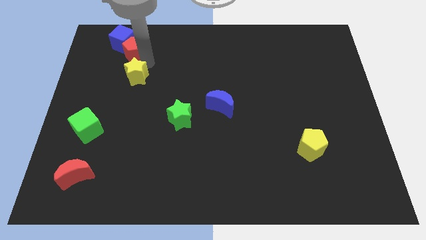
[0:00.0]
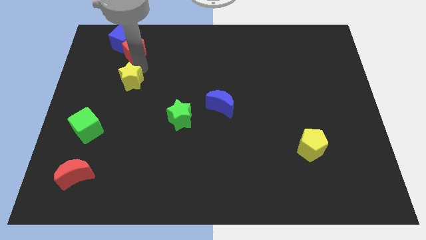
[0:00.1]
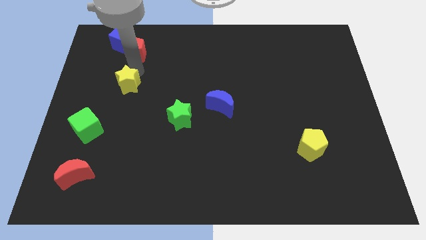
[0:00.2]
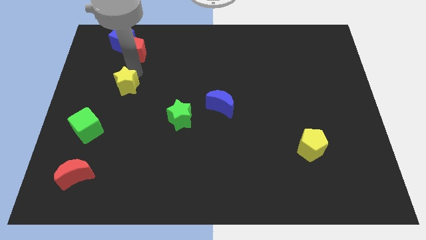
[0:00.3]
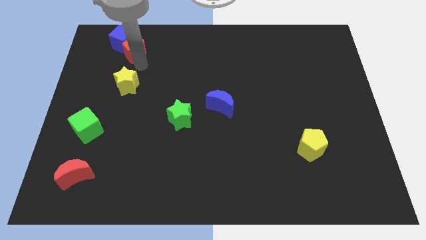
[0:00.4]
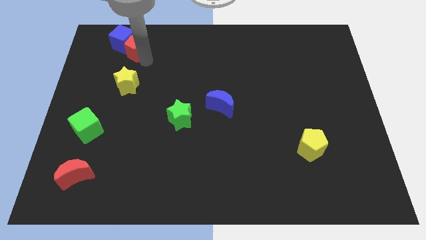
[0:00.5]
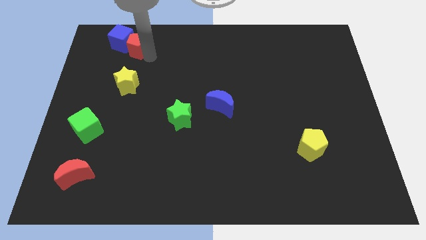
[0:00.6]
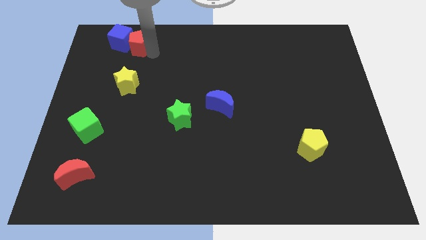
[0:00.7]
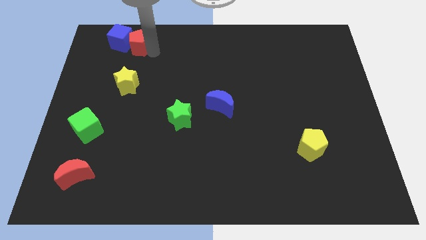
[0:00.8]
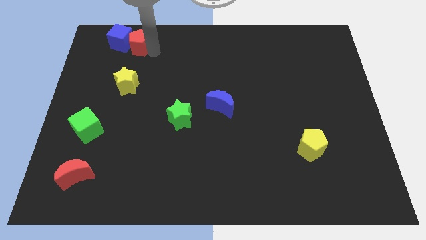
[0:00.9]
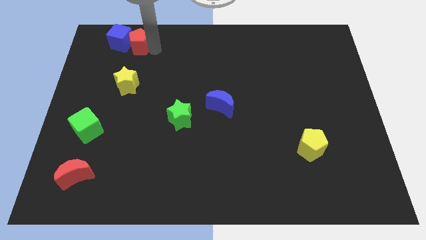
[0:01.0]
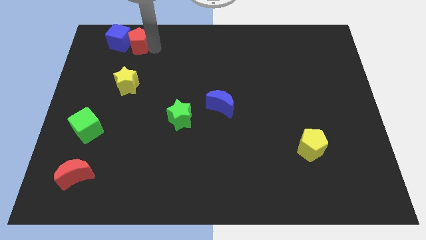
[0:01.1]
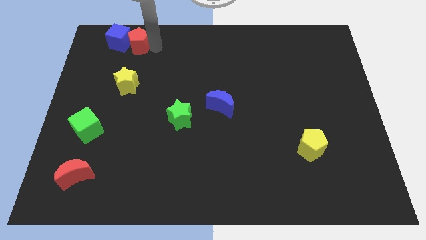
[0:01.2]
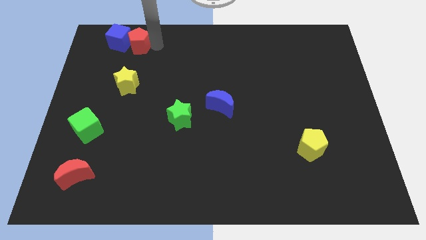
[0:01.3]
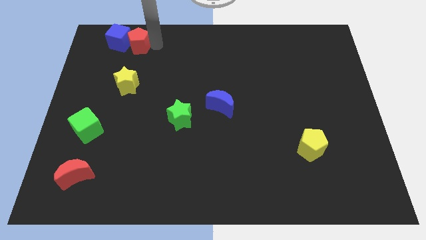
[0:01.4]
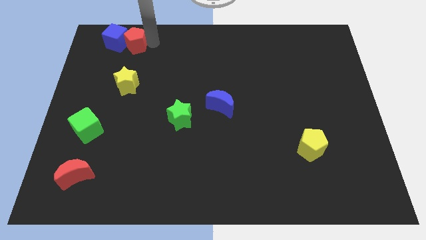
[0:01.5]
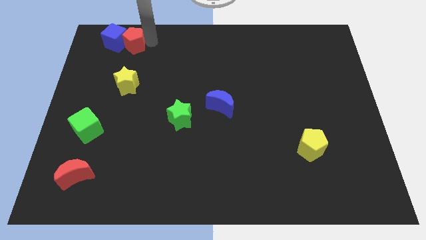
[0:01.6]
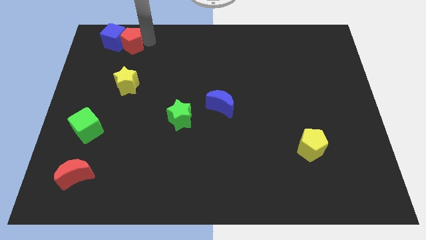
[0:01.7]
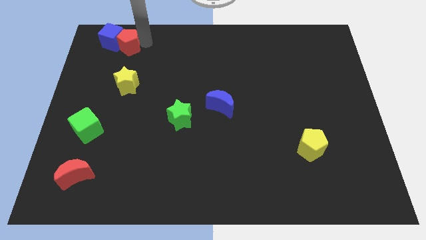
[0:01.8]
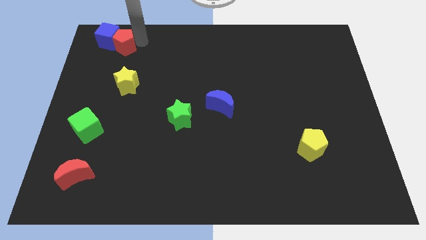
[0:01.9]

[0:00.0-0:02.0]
separate the yellow star from the red pentagon and the blue cube

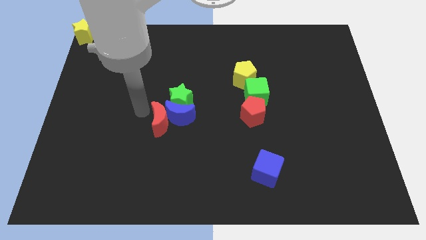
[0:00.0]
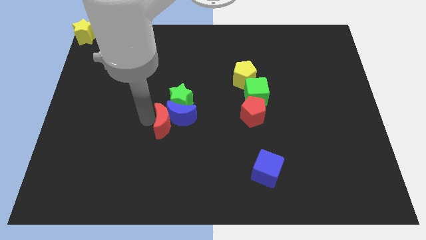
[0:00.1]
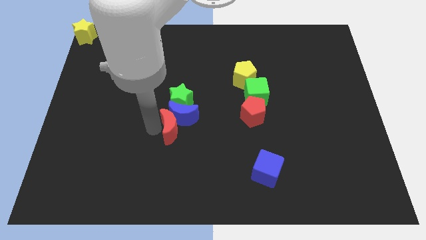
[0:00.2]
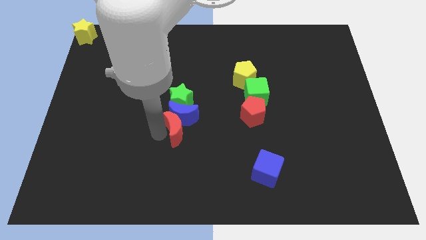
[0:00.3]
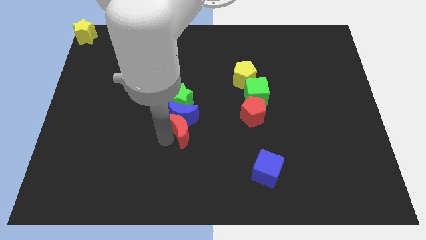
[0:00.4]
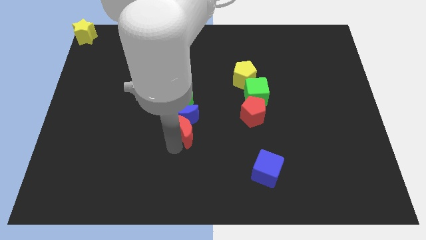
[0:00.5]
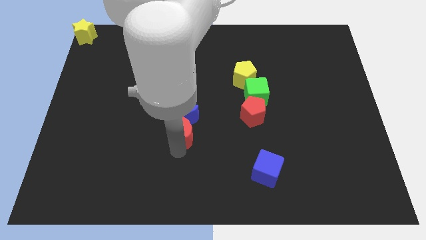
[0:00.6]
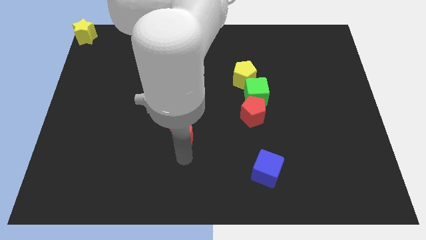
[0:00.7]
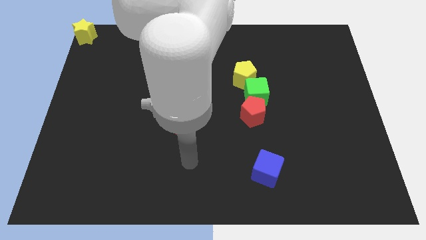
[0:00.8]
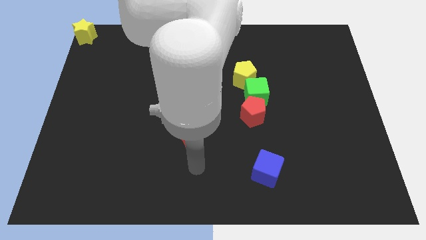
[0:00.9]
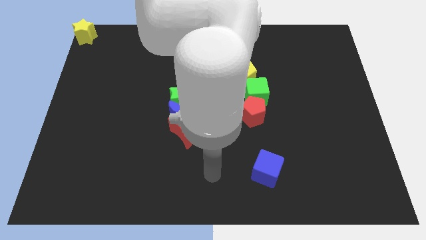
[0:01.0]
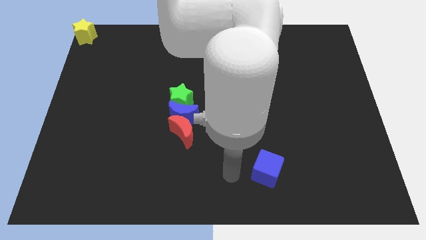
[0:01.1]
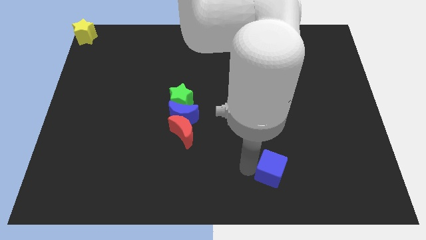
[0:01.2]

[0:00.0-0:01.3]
put the red moon at the bottom of blue moon

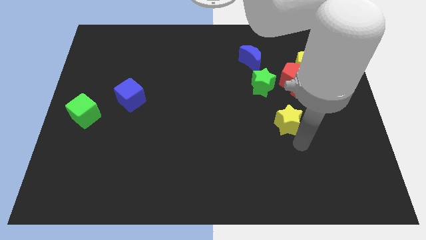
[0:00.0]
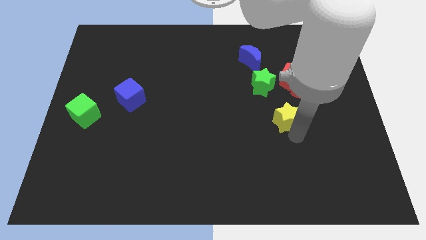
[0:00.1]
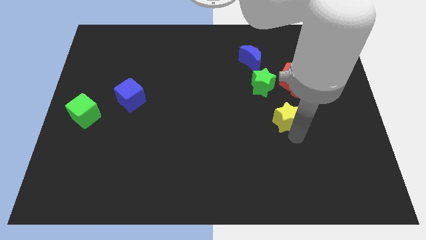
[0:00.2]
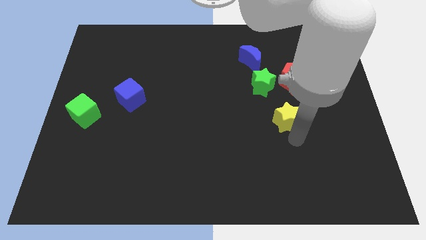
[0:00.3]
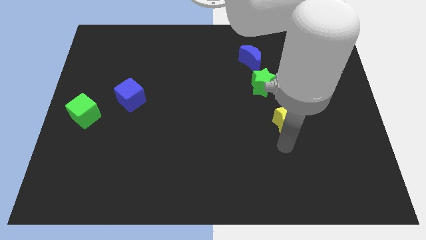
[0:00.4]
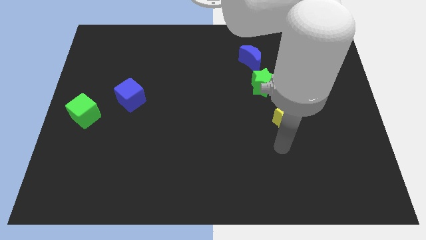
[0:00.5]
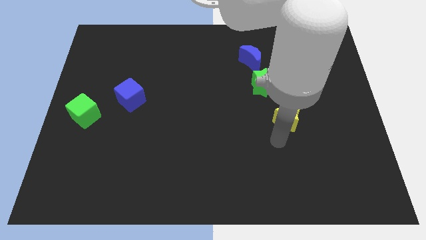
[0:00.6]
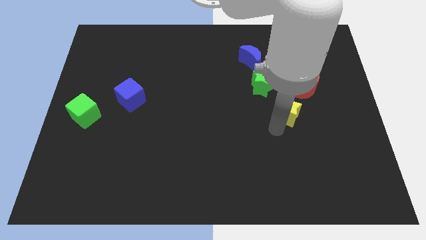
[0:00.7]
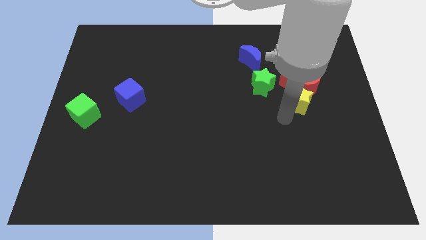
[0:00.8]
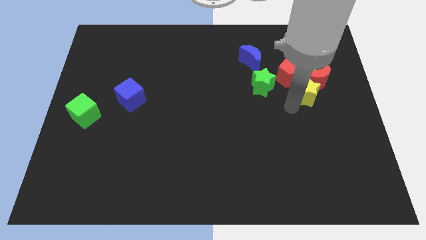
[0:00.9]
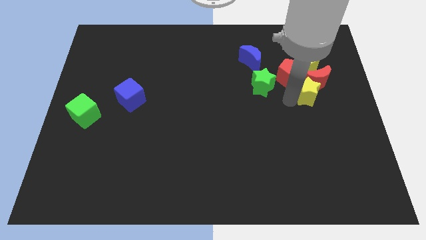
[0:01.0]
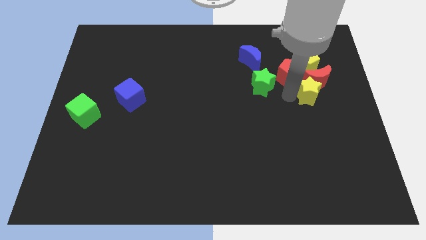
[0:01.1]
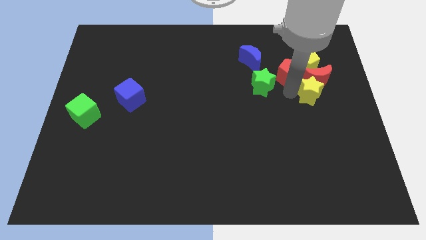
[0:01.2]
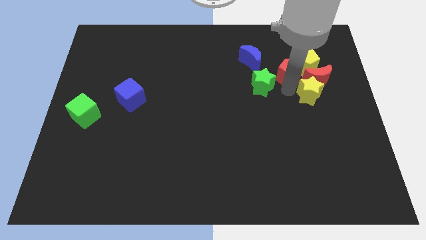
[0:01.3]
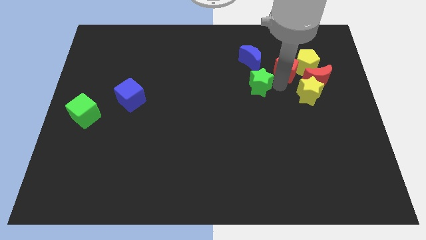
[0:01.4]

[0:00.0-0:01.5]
push the yellow star into the red crescent

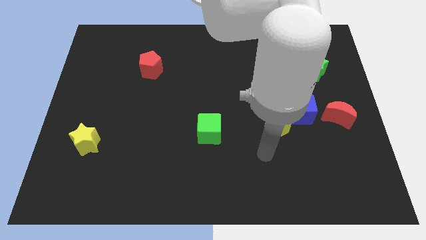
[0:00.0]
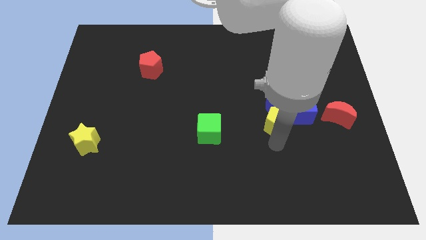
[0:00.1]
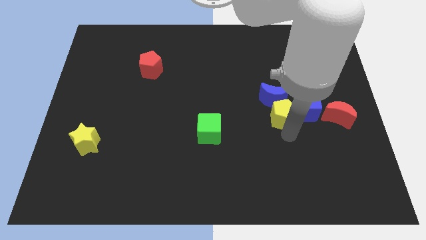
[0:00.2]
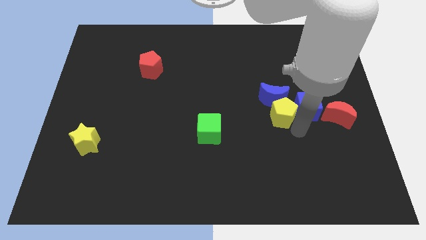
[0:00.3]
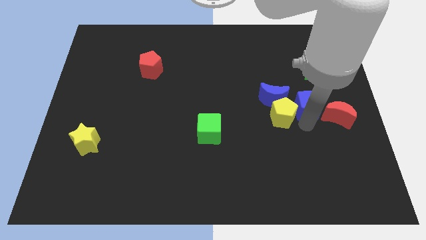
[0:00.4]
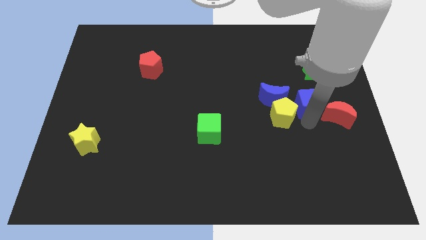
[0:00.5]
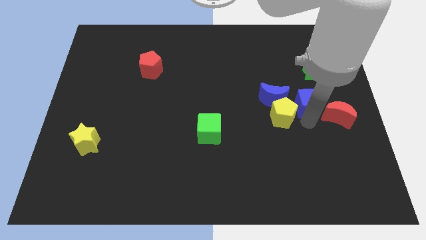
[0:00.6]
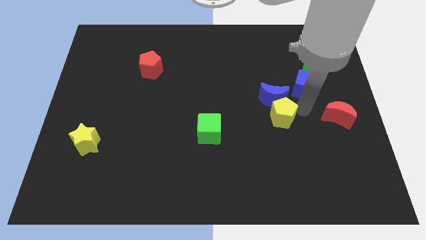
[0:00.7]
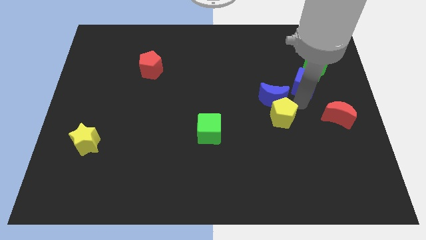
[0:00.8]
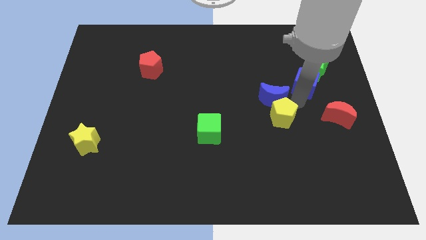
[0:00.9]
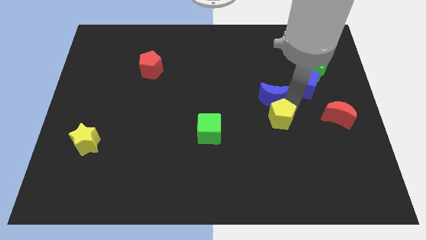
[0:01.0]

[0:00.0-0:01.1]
place your arm in between yellow pentagon and blue cube

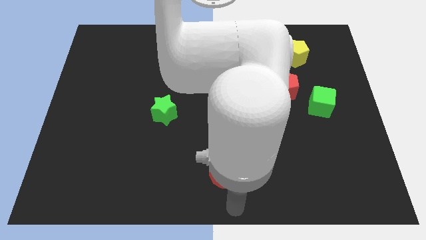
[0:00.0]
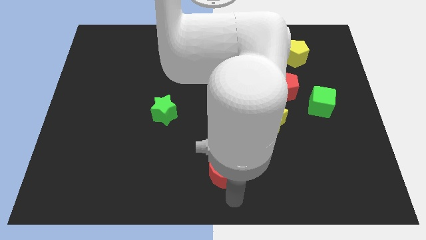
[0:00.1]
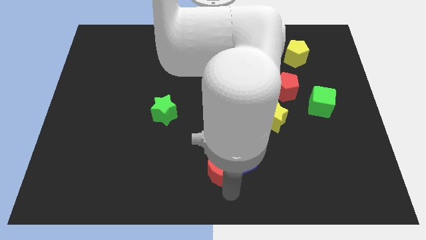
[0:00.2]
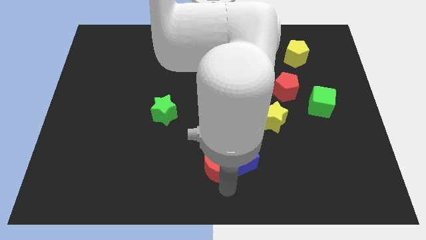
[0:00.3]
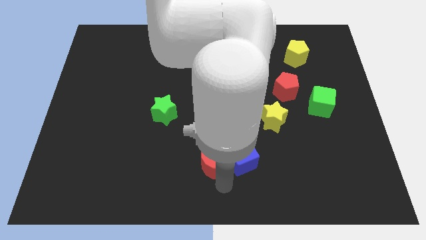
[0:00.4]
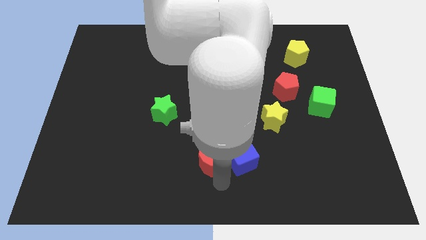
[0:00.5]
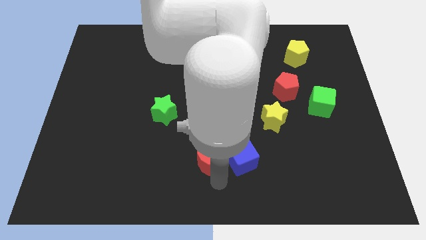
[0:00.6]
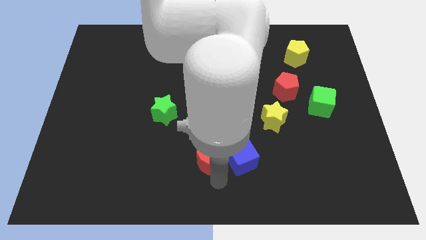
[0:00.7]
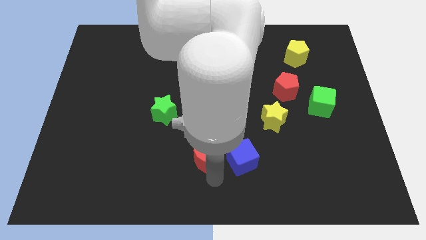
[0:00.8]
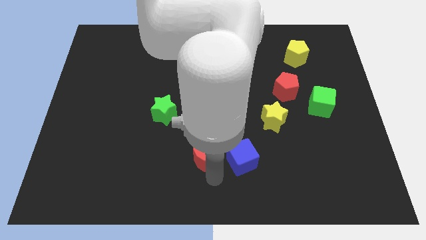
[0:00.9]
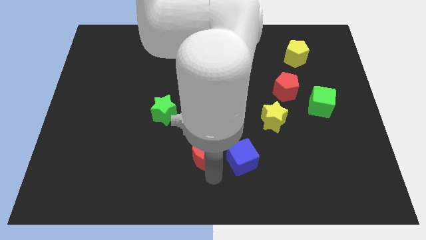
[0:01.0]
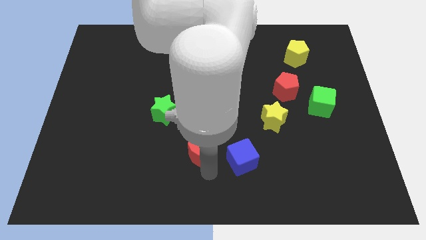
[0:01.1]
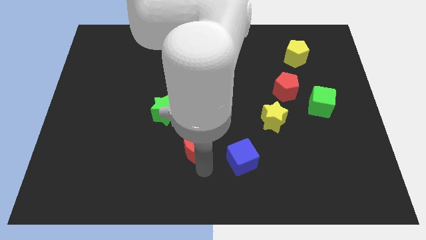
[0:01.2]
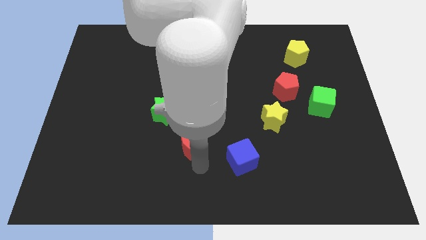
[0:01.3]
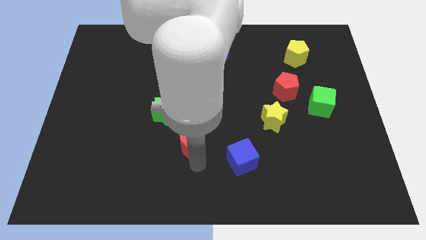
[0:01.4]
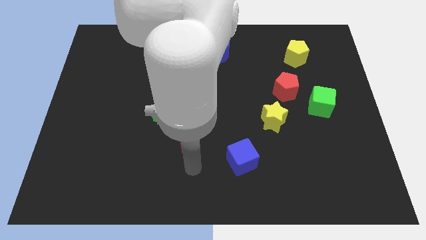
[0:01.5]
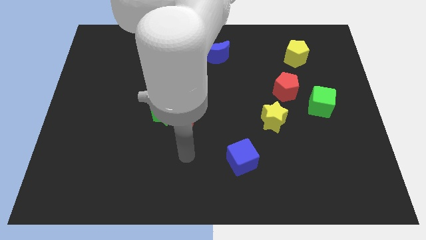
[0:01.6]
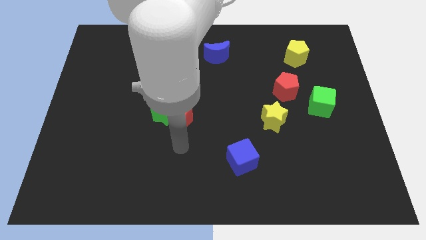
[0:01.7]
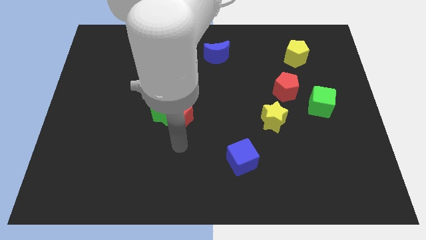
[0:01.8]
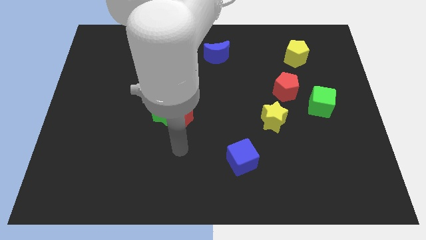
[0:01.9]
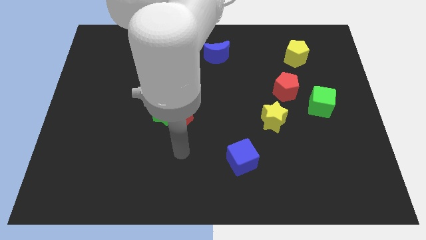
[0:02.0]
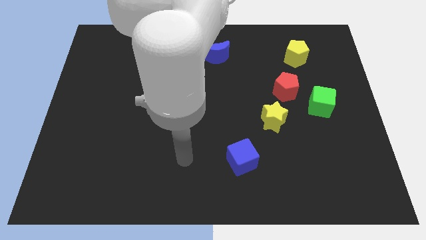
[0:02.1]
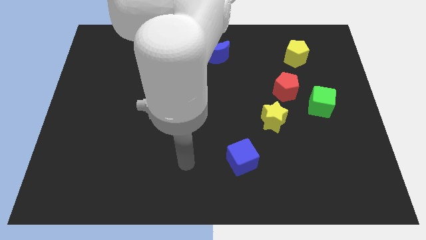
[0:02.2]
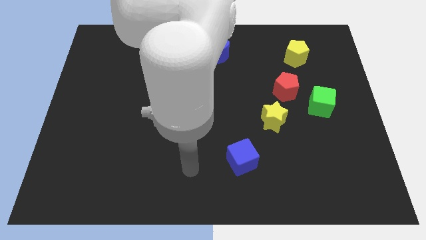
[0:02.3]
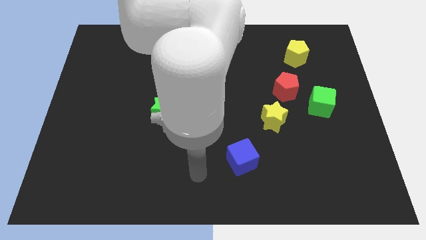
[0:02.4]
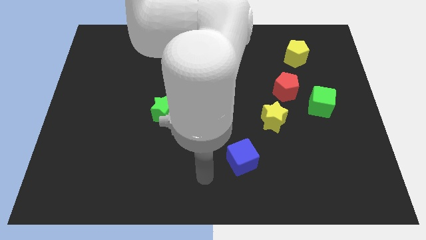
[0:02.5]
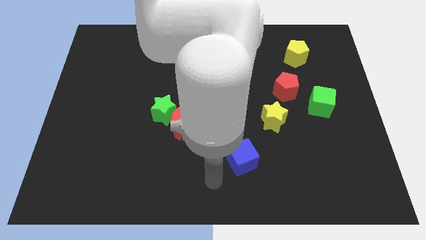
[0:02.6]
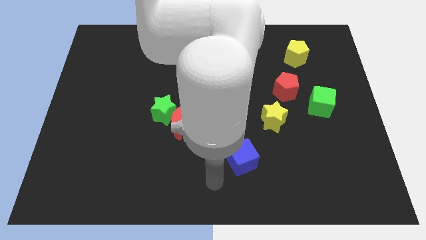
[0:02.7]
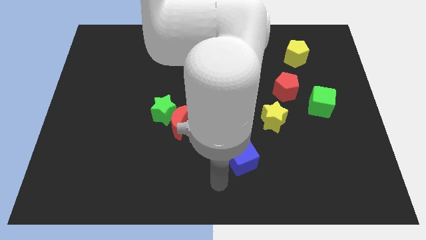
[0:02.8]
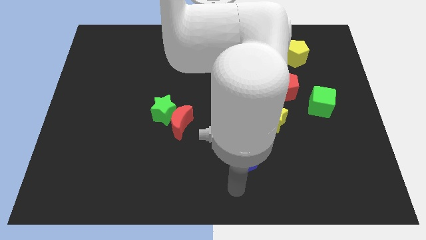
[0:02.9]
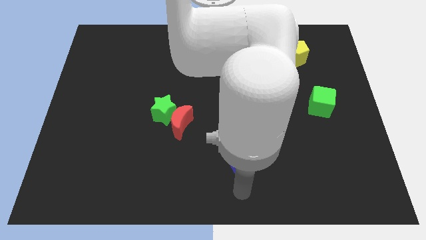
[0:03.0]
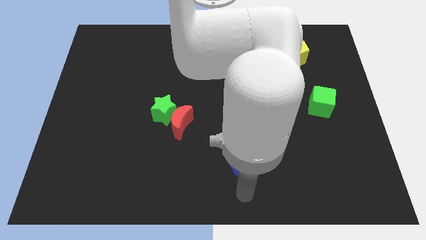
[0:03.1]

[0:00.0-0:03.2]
push the red moon towards the green star

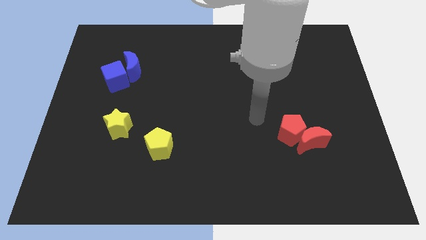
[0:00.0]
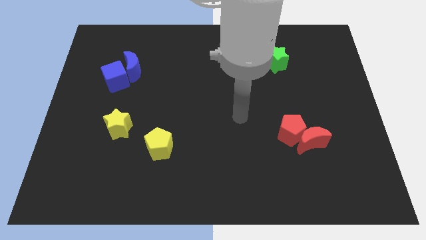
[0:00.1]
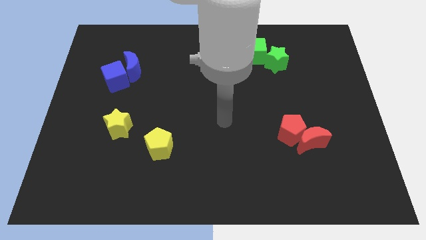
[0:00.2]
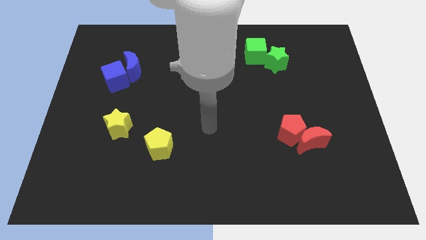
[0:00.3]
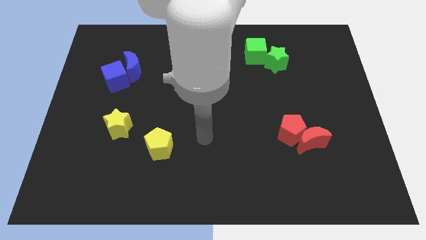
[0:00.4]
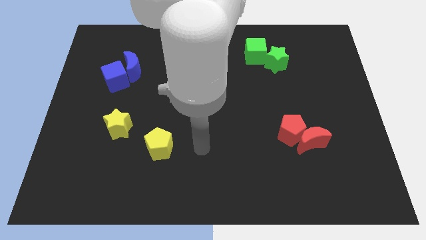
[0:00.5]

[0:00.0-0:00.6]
move arm towards yellow pentagon
